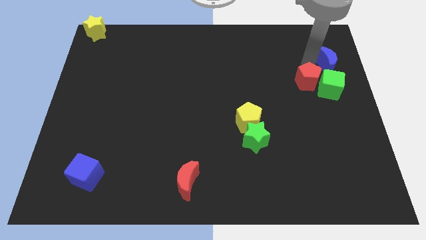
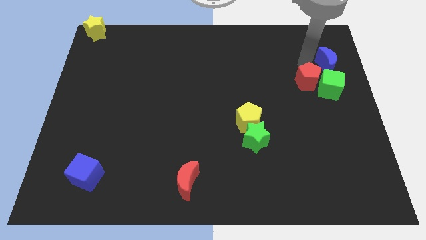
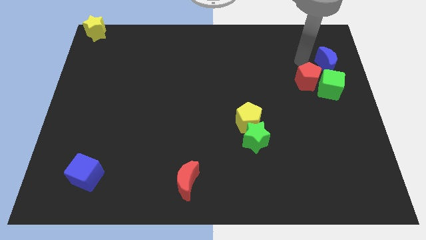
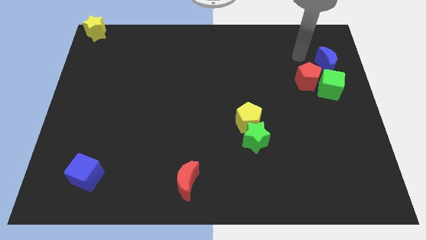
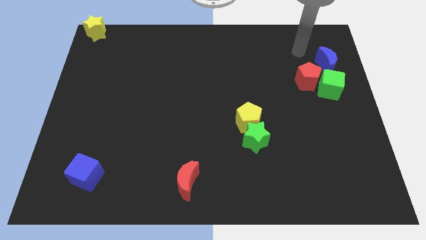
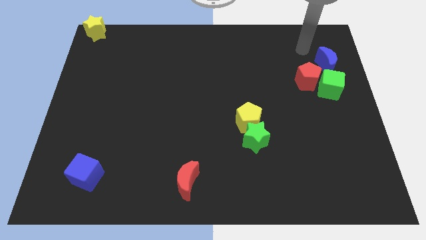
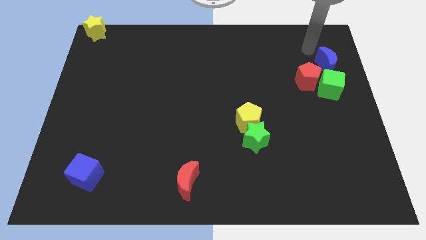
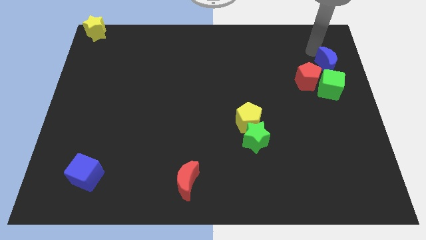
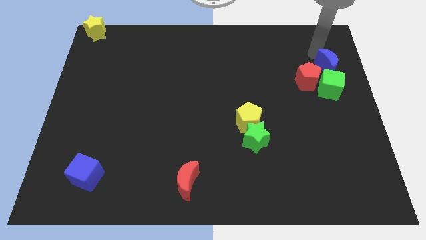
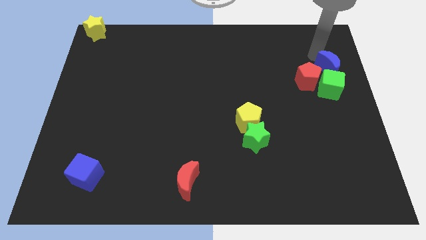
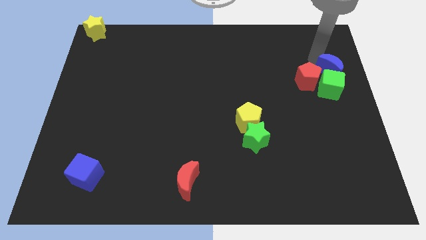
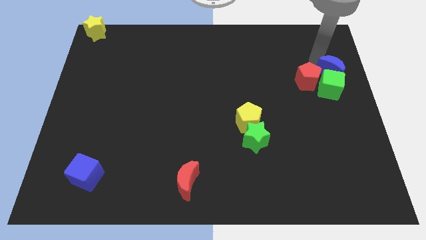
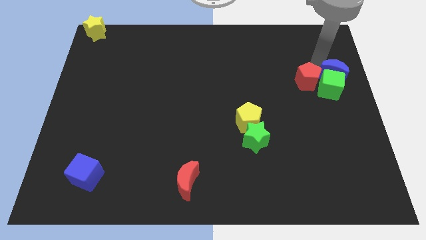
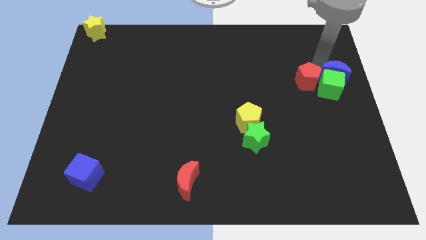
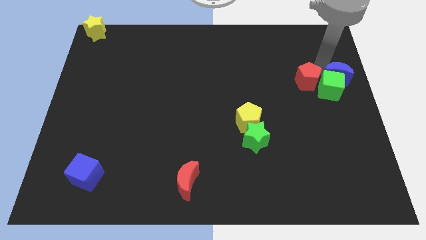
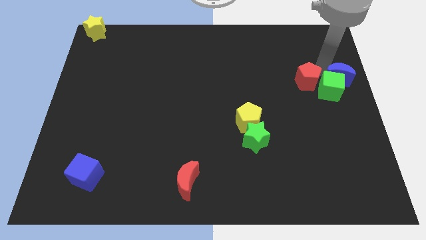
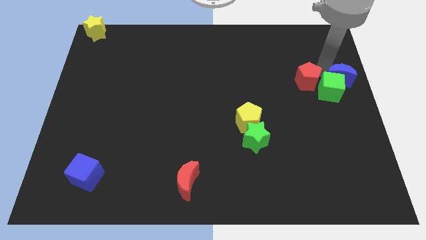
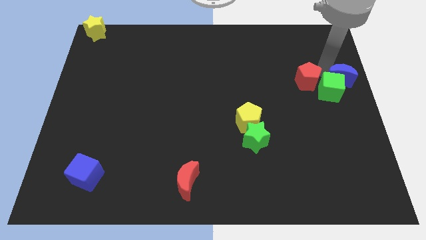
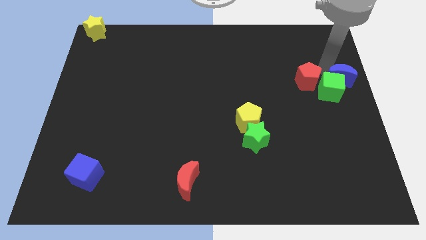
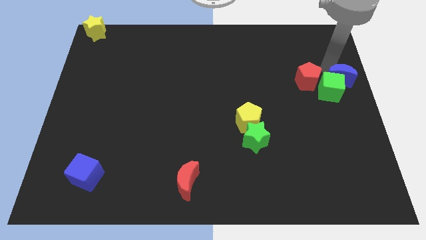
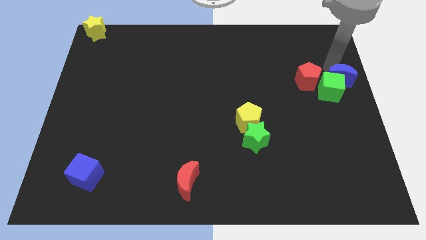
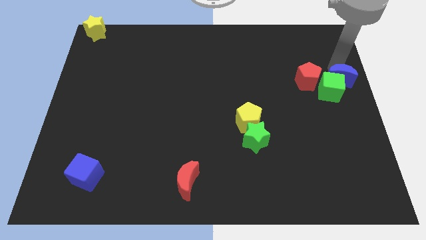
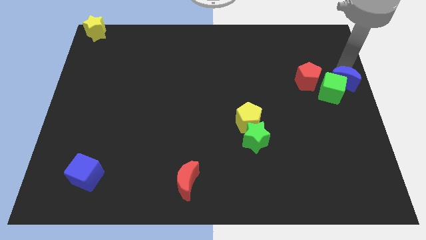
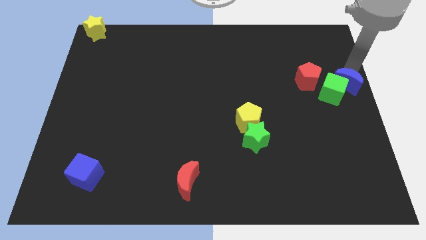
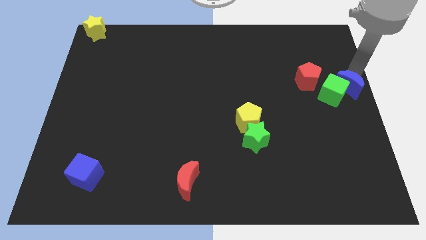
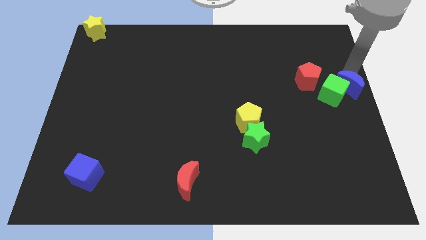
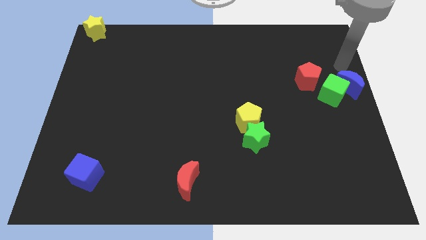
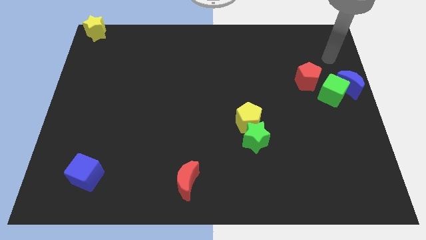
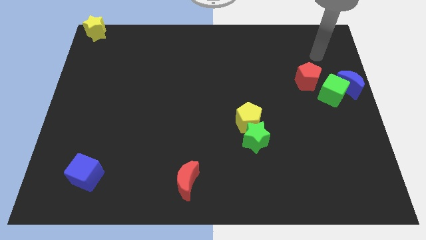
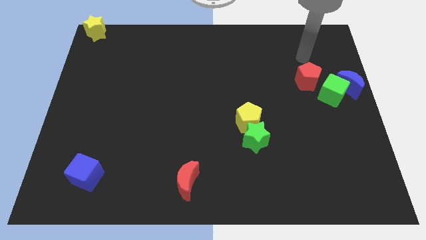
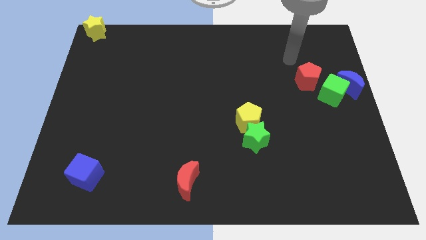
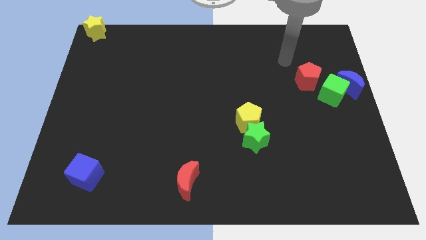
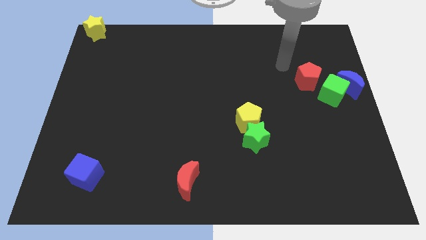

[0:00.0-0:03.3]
push the blue crescent into the green cube

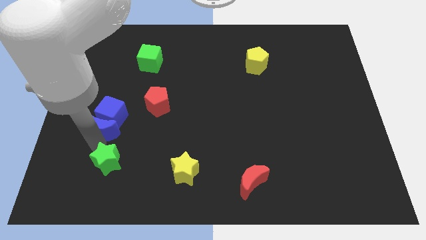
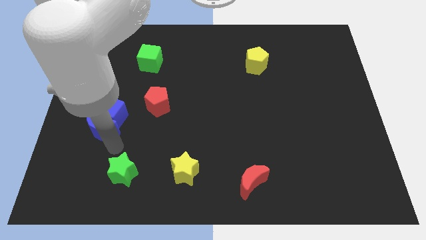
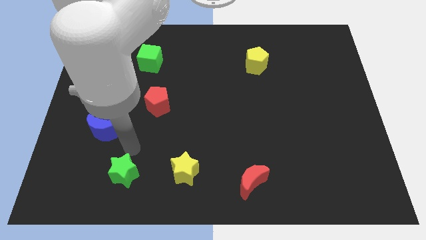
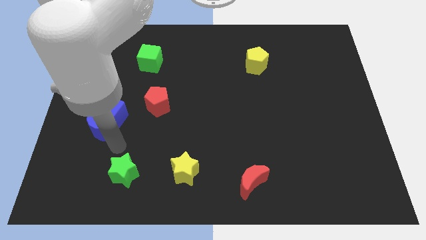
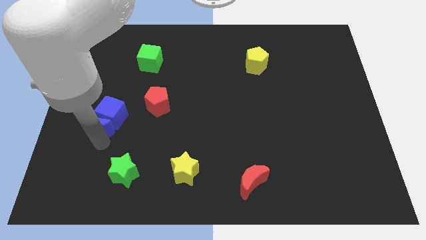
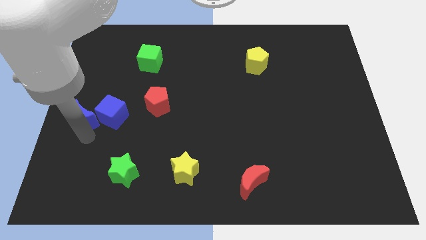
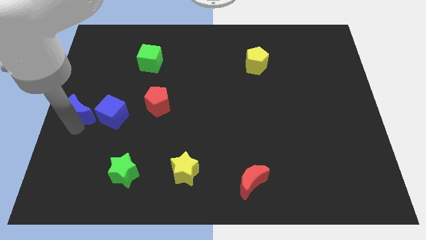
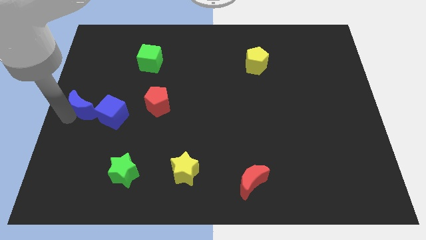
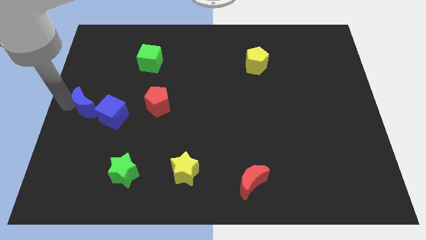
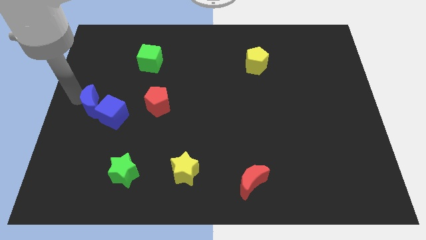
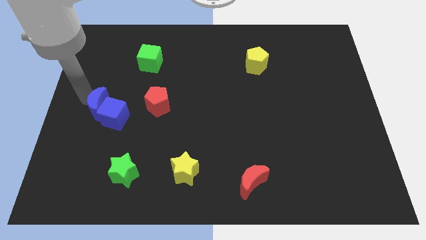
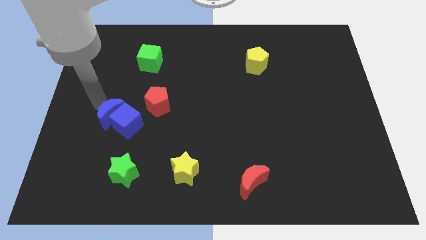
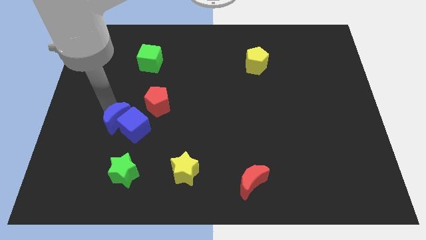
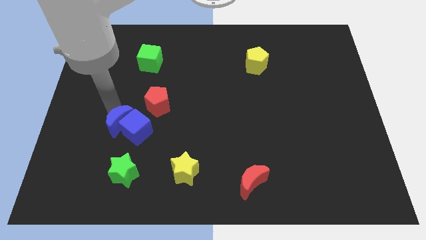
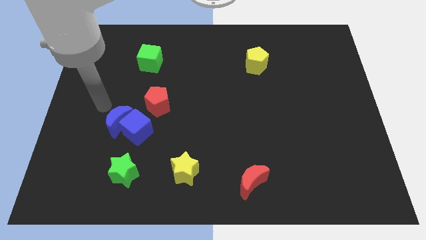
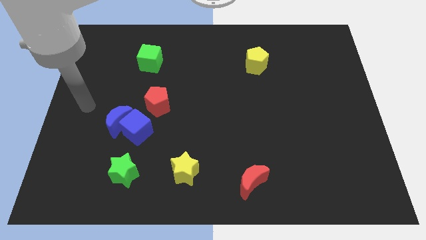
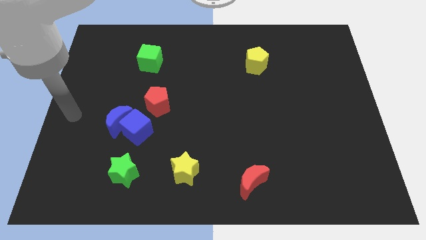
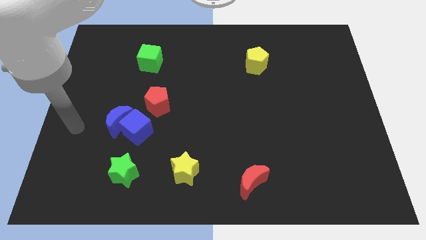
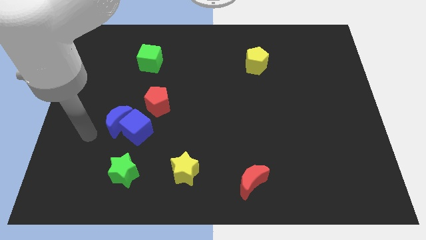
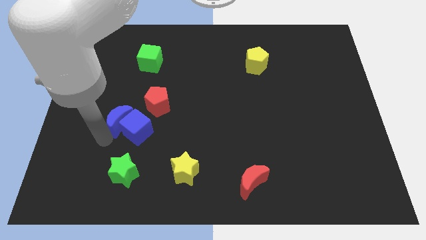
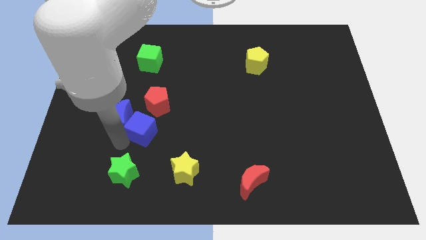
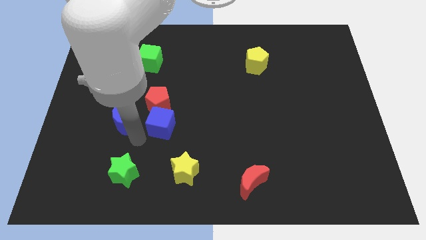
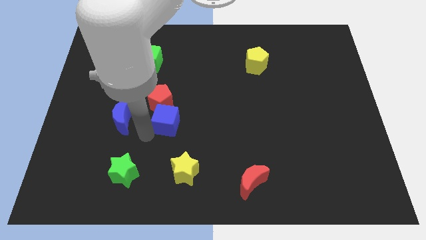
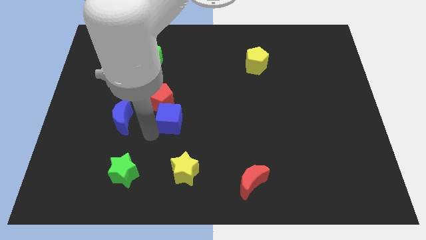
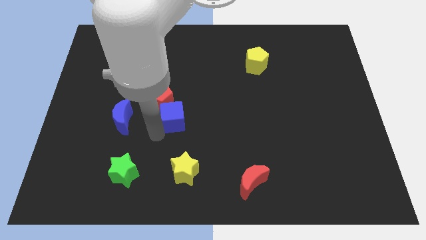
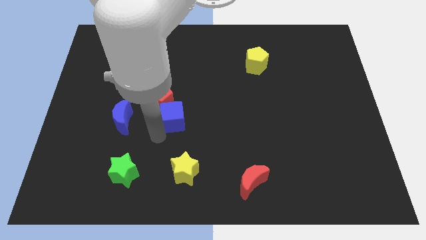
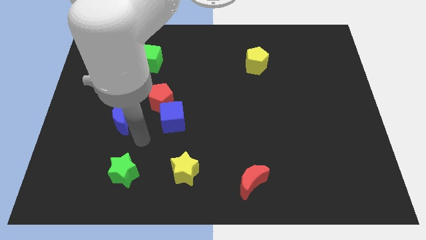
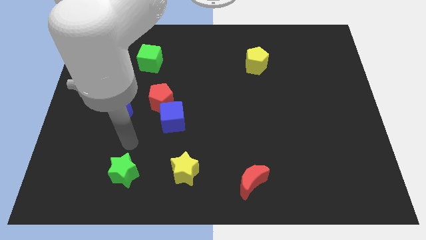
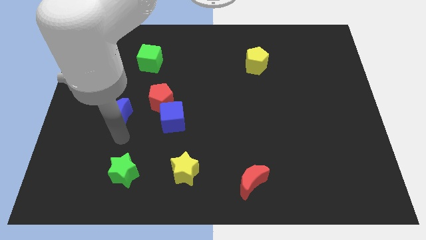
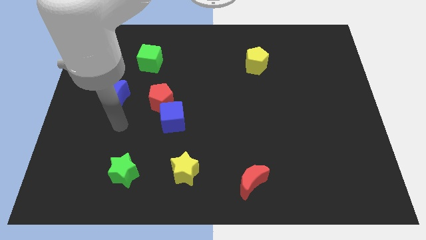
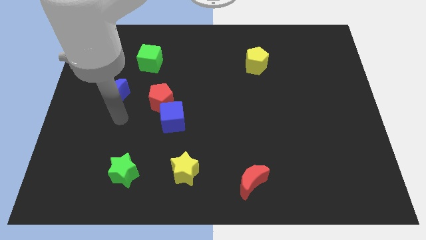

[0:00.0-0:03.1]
separate the blue crescent and blue cube

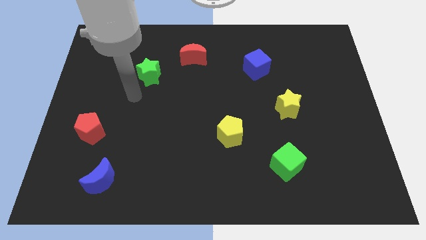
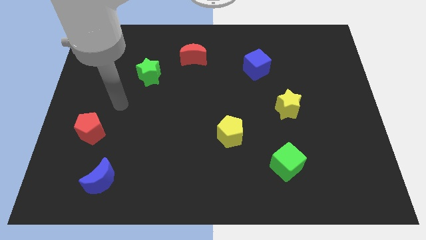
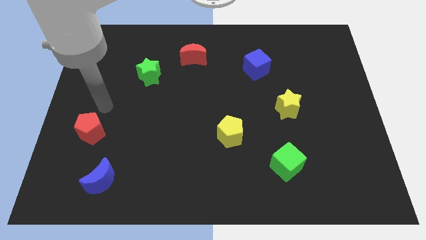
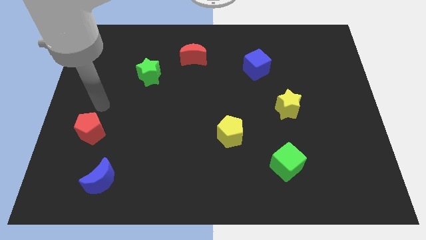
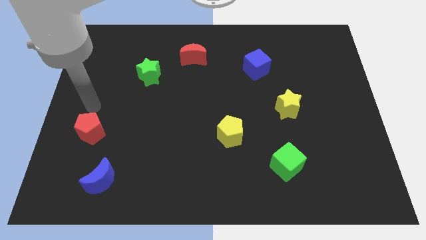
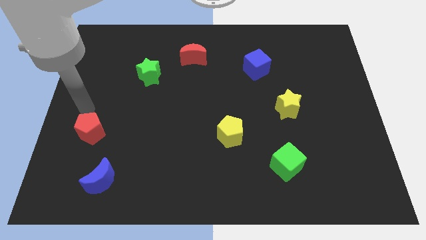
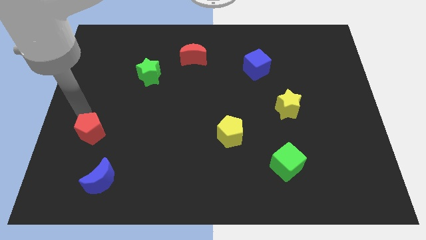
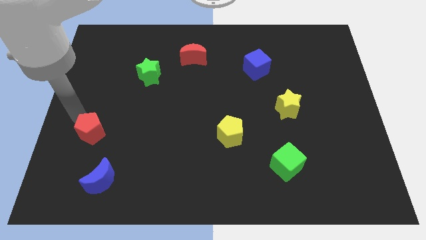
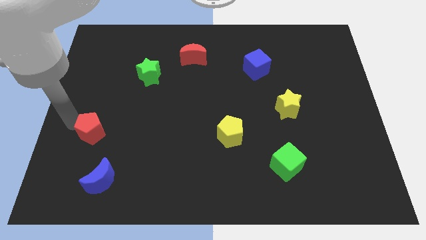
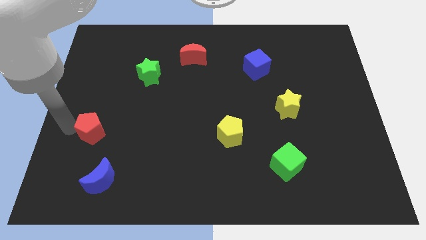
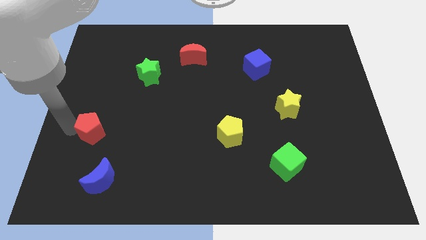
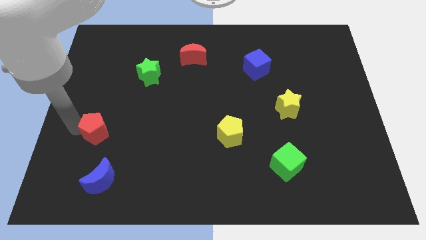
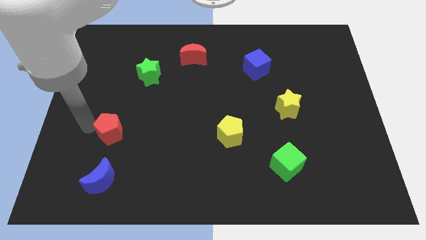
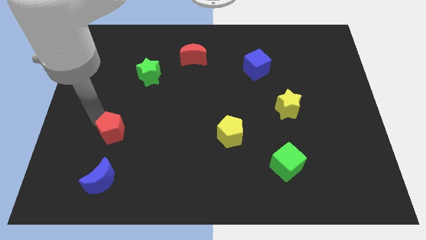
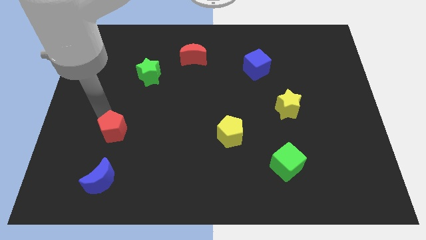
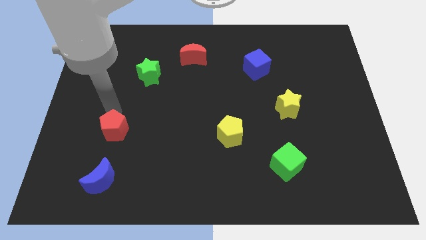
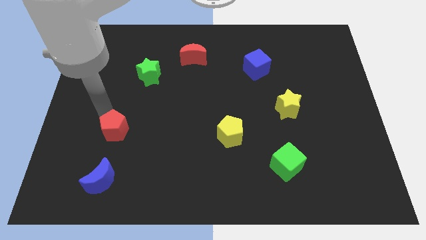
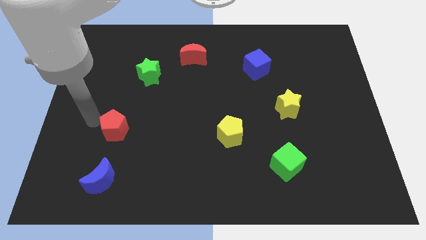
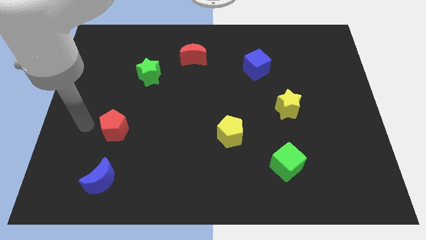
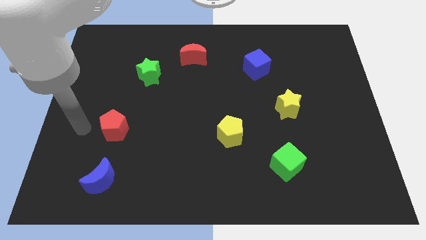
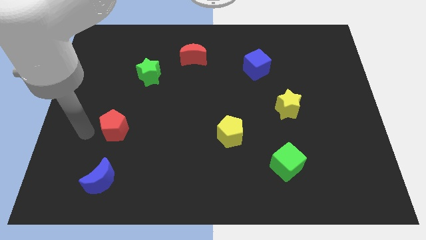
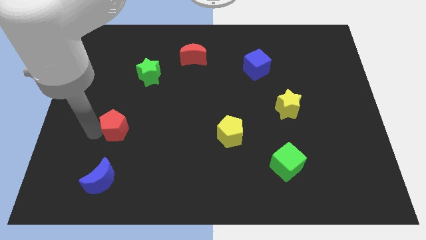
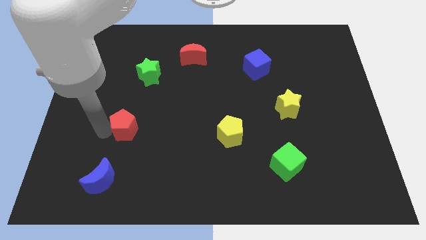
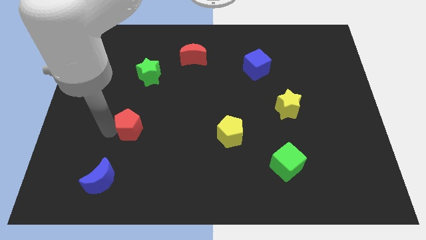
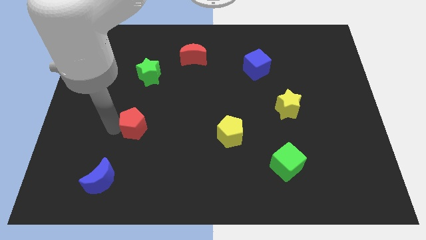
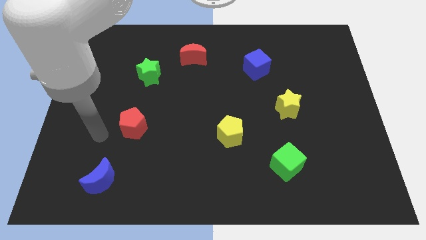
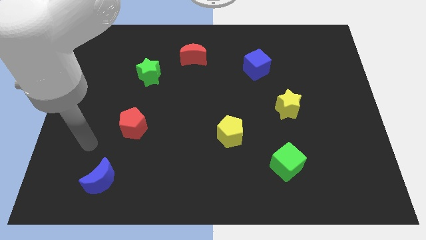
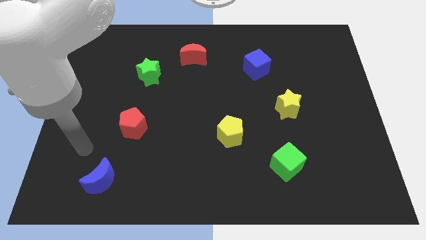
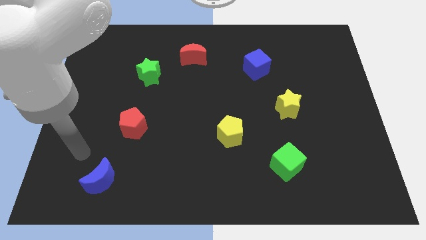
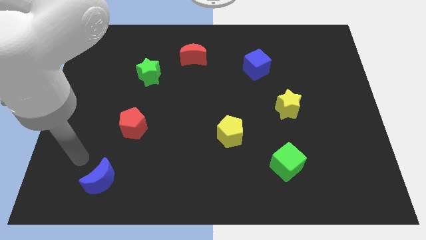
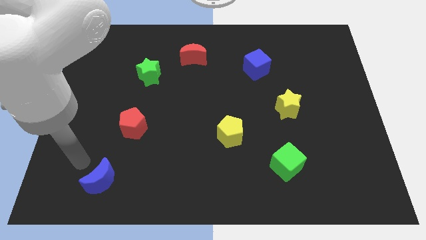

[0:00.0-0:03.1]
place the red pentagon vertically below the green star
